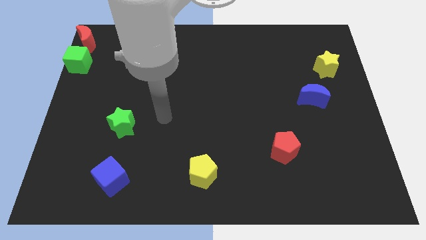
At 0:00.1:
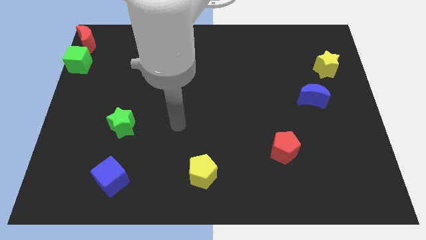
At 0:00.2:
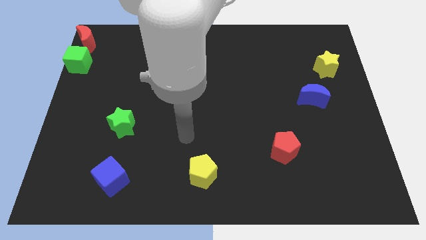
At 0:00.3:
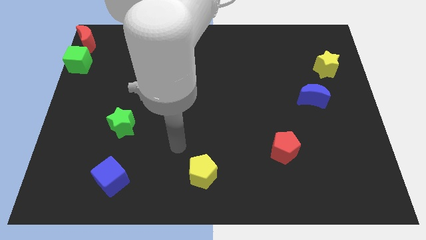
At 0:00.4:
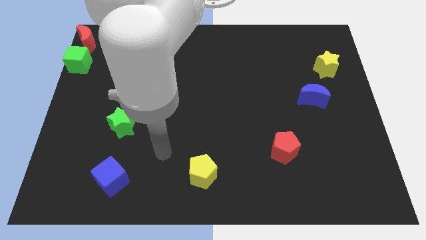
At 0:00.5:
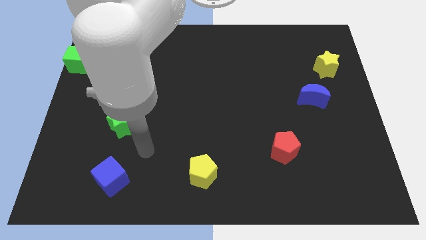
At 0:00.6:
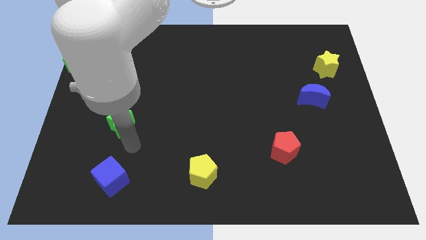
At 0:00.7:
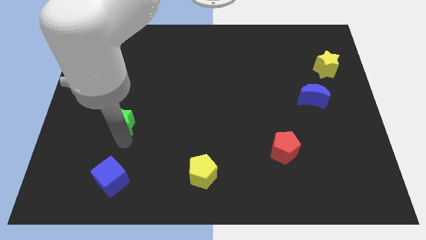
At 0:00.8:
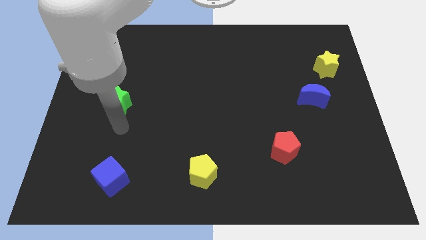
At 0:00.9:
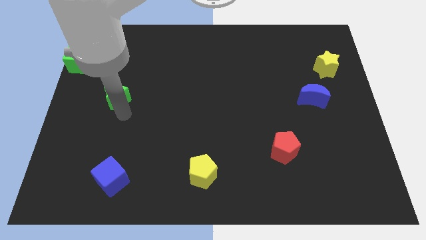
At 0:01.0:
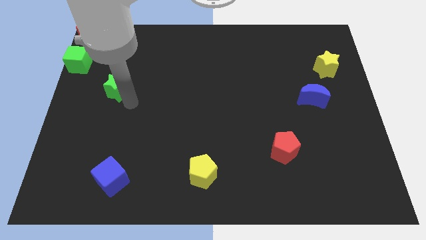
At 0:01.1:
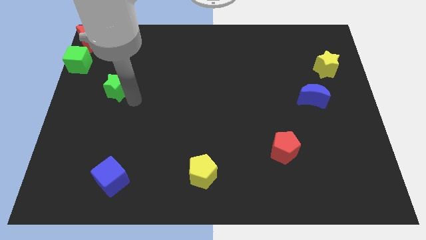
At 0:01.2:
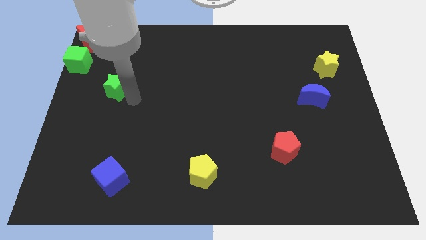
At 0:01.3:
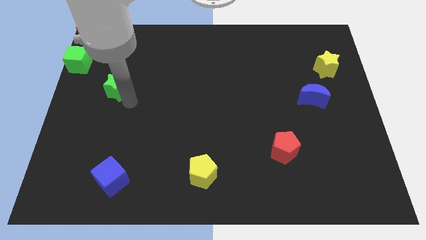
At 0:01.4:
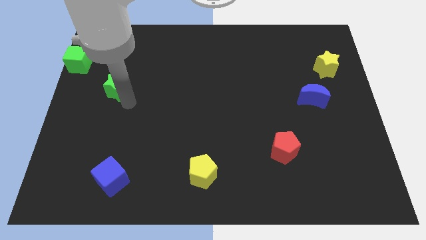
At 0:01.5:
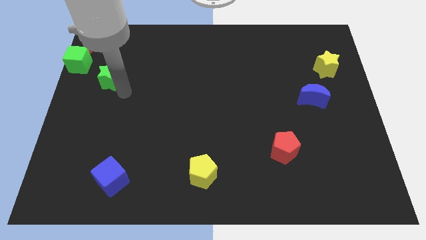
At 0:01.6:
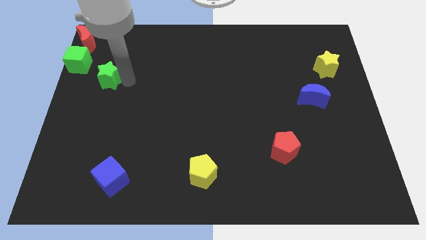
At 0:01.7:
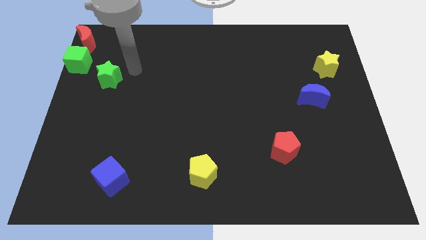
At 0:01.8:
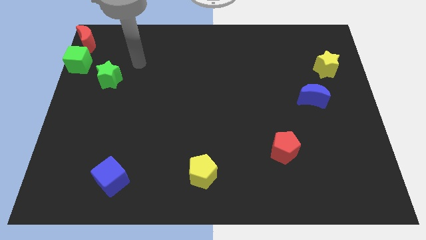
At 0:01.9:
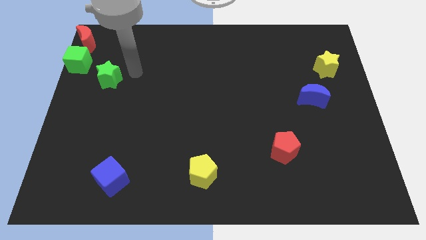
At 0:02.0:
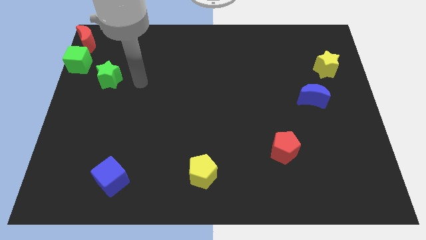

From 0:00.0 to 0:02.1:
move the green star towards the right side of the green cube

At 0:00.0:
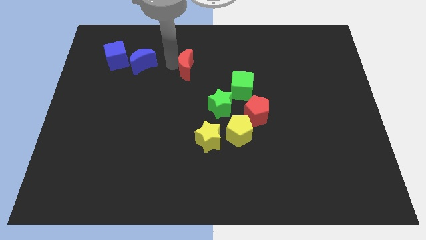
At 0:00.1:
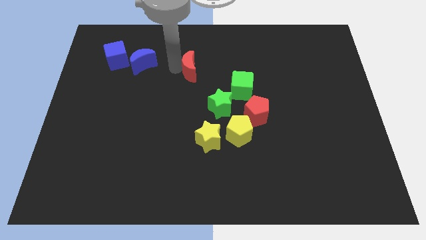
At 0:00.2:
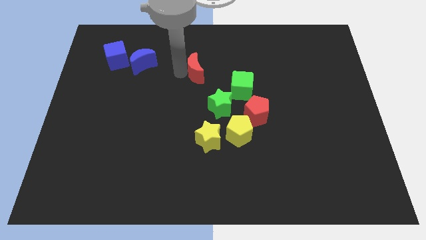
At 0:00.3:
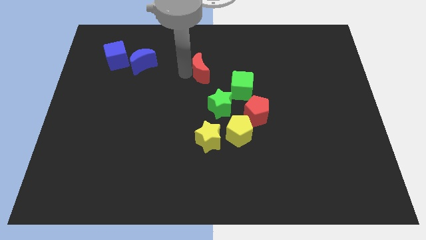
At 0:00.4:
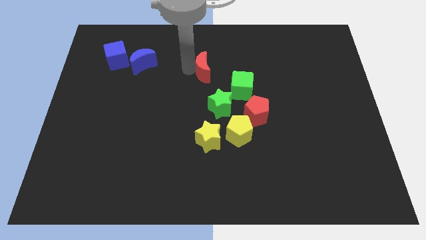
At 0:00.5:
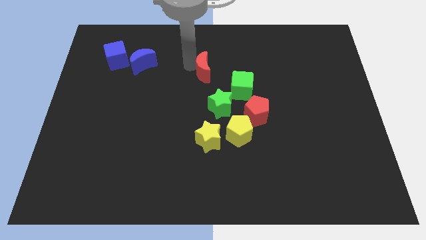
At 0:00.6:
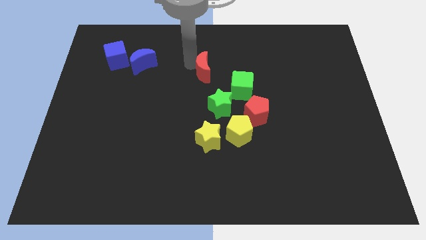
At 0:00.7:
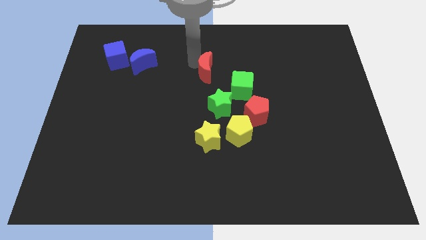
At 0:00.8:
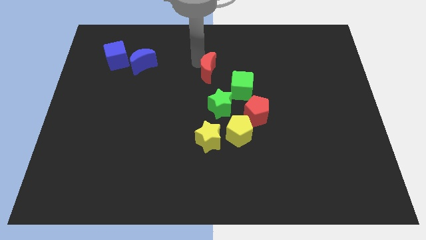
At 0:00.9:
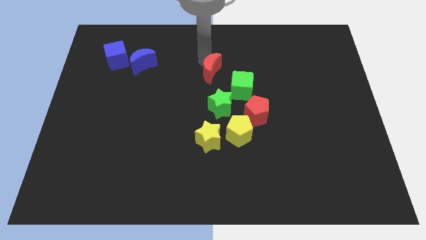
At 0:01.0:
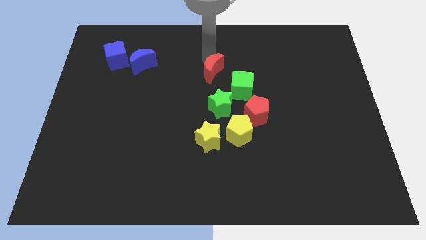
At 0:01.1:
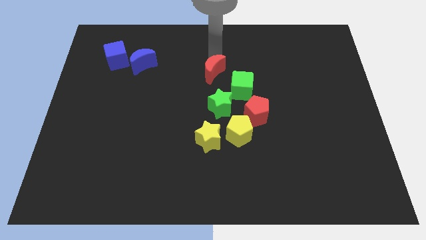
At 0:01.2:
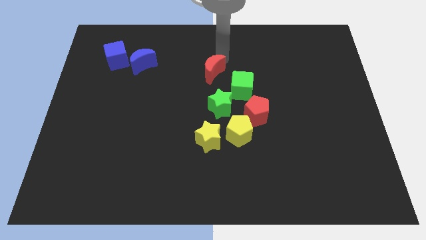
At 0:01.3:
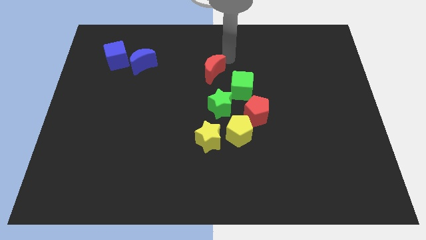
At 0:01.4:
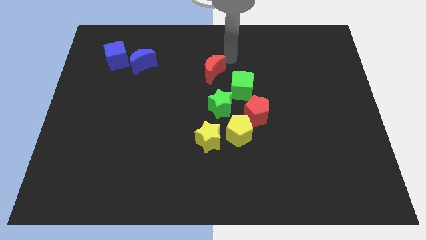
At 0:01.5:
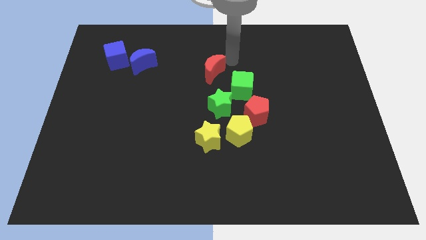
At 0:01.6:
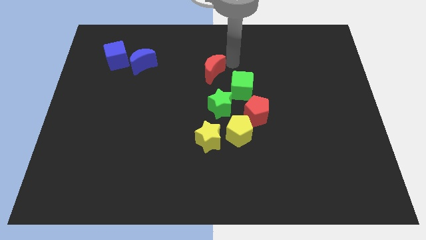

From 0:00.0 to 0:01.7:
place the red crescent diagonally to the top left of the green cube

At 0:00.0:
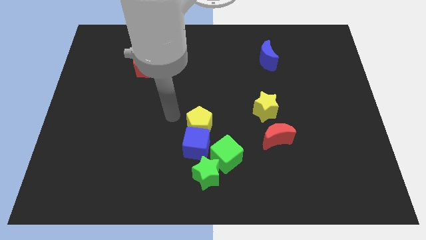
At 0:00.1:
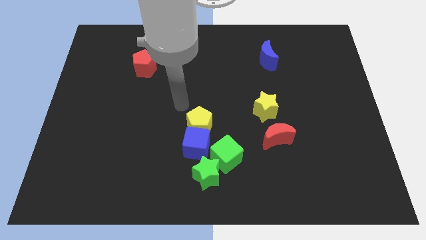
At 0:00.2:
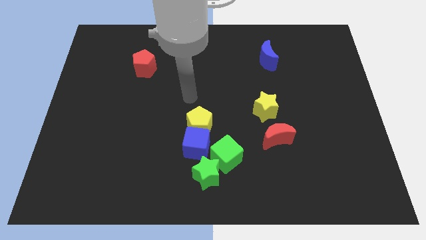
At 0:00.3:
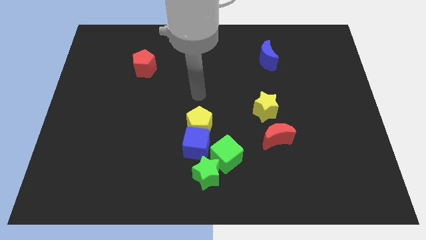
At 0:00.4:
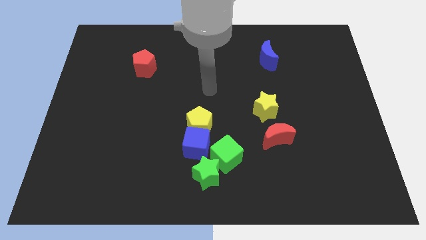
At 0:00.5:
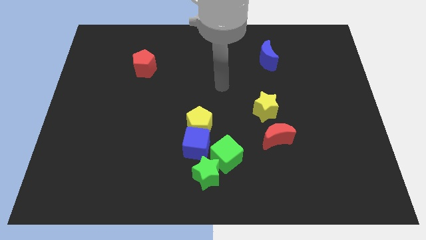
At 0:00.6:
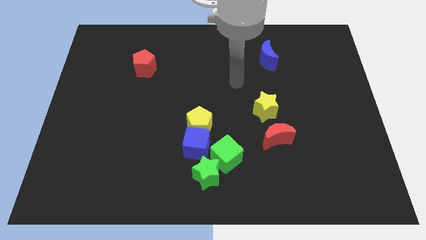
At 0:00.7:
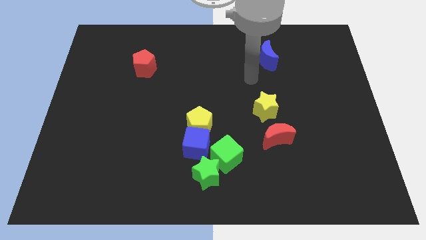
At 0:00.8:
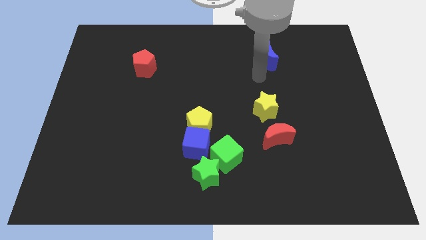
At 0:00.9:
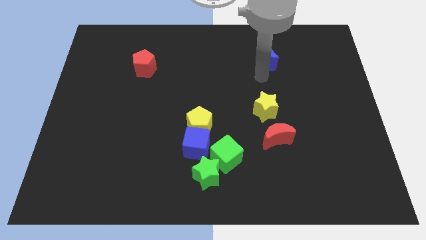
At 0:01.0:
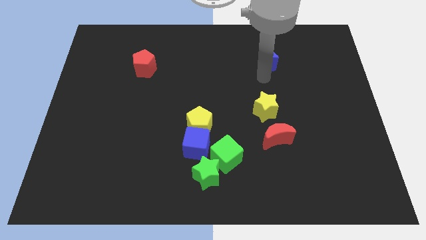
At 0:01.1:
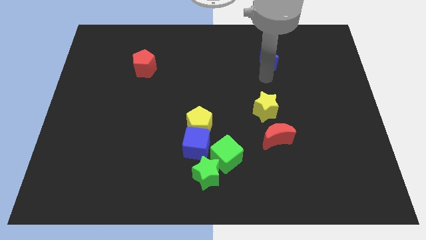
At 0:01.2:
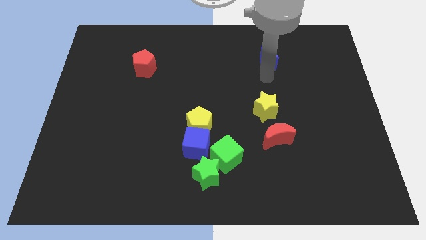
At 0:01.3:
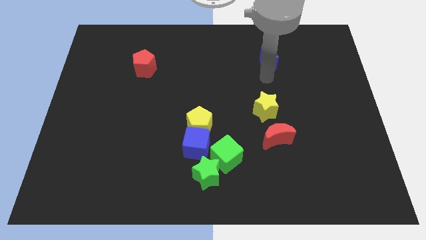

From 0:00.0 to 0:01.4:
put your hand in between blue crescent and yellow star

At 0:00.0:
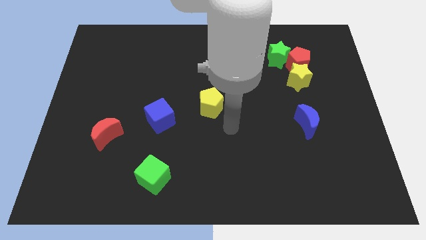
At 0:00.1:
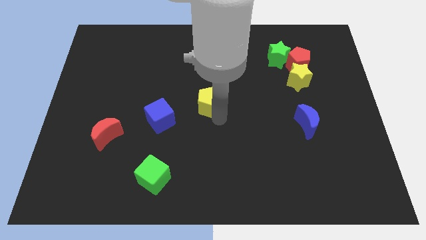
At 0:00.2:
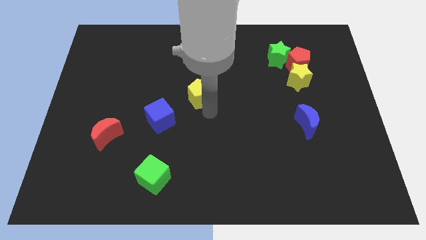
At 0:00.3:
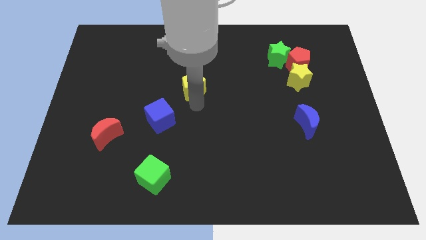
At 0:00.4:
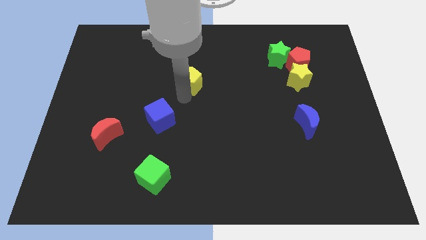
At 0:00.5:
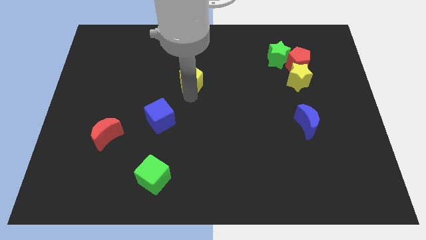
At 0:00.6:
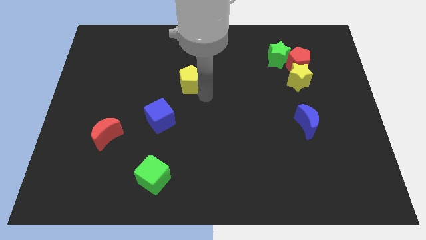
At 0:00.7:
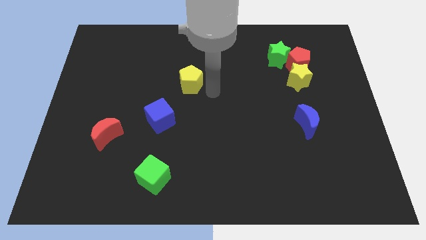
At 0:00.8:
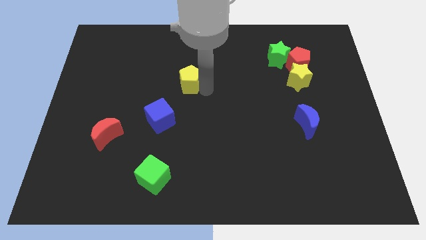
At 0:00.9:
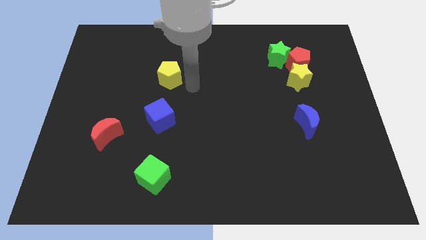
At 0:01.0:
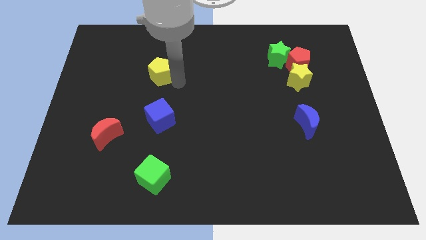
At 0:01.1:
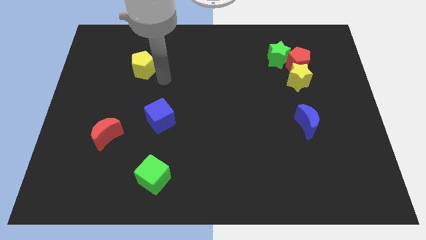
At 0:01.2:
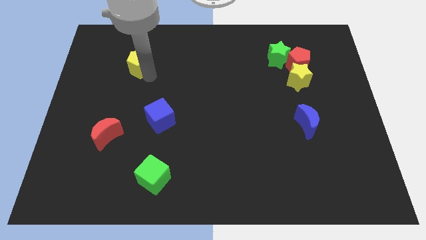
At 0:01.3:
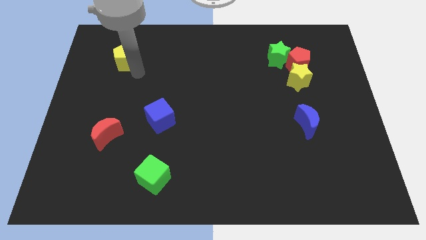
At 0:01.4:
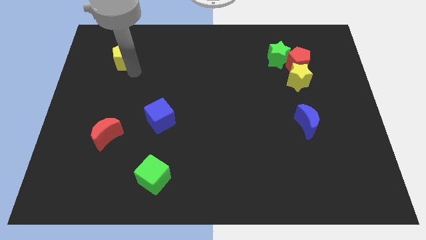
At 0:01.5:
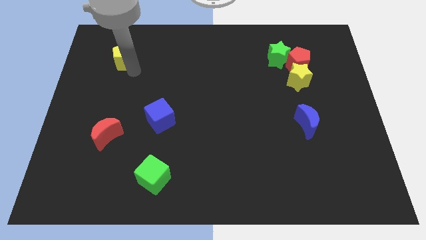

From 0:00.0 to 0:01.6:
slide the yellow pentagon diagonally on the top left side of the blue cube

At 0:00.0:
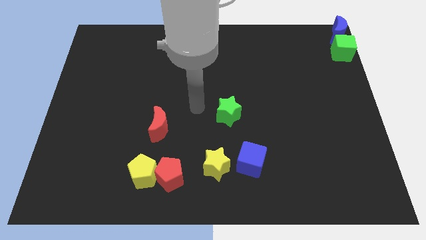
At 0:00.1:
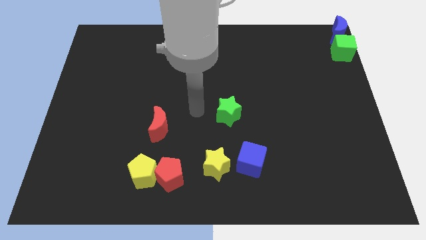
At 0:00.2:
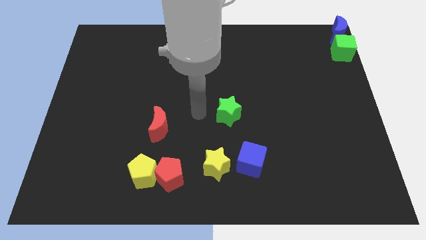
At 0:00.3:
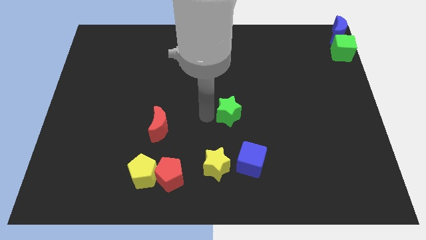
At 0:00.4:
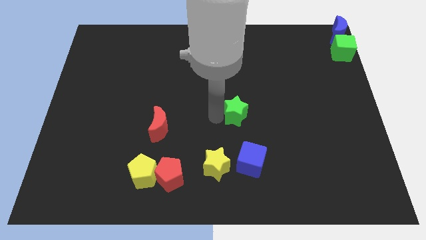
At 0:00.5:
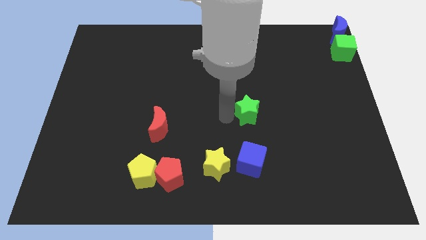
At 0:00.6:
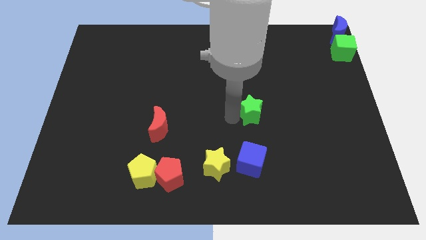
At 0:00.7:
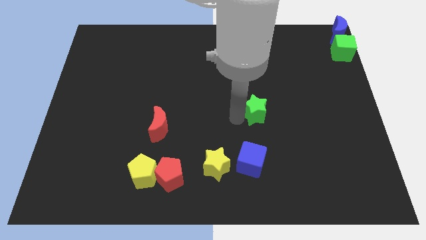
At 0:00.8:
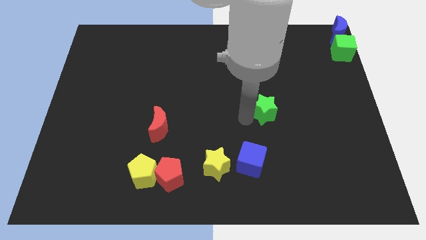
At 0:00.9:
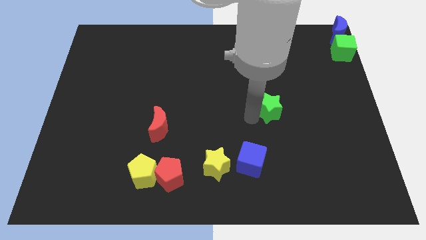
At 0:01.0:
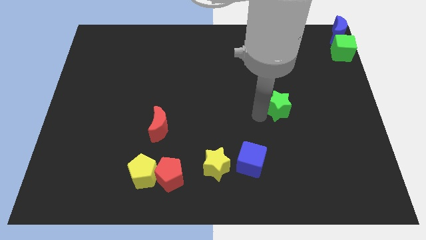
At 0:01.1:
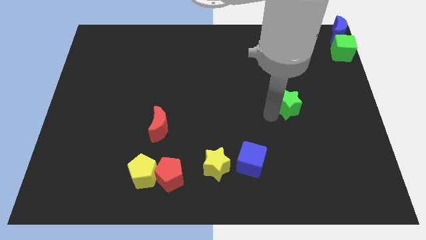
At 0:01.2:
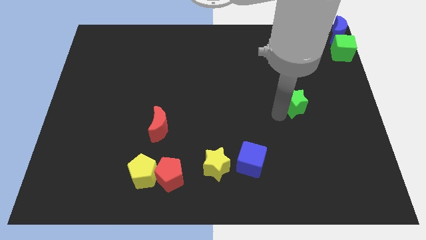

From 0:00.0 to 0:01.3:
move the green star to the right side

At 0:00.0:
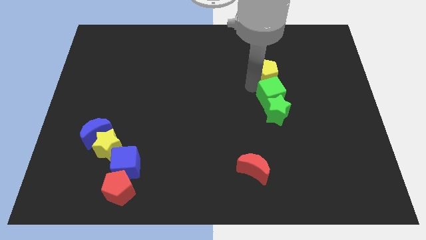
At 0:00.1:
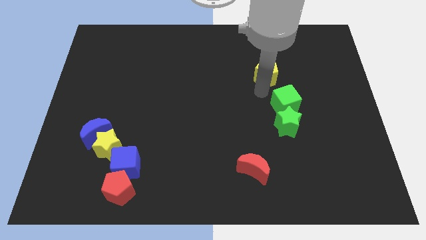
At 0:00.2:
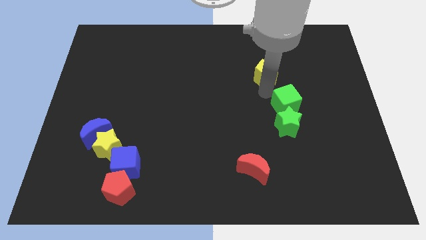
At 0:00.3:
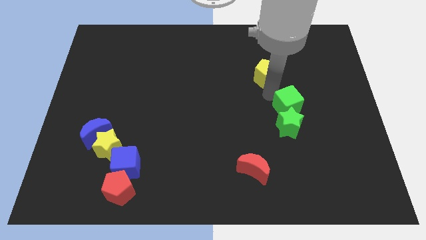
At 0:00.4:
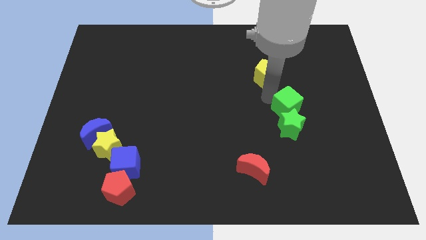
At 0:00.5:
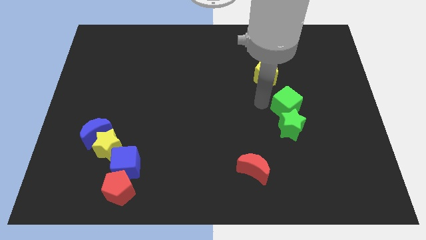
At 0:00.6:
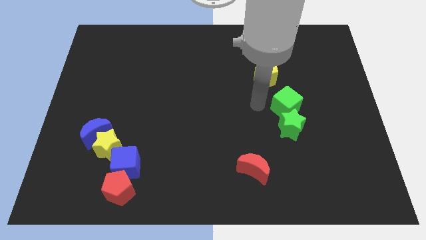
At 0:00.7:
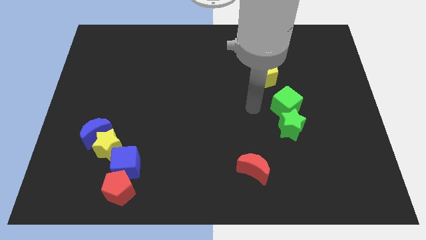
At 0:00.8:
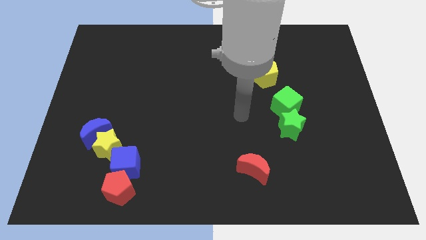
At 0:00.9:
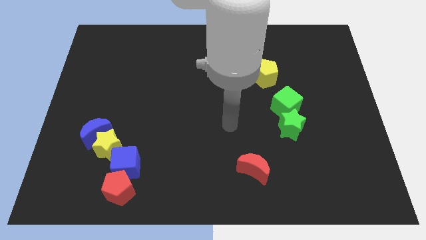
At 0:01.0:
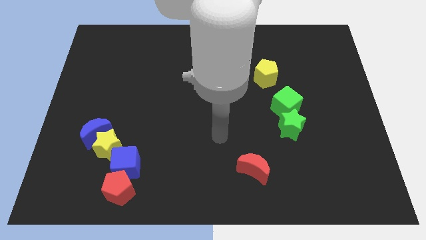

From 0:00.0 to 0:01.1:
push the green blocks together to the bottom right of the yellow pentagon
